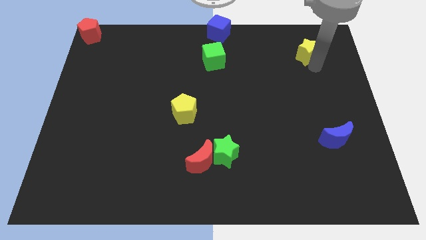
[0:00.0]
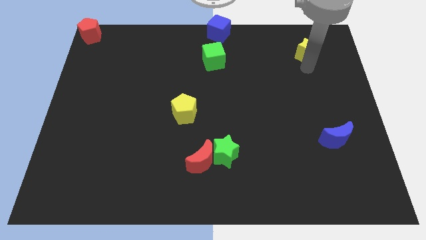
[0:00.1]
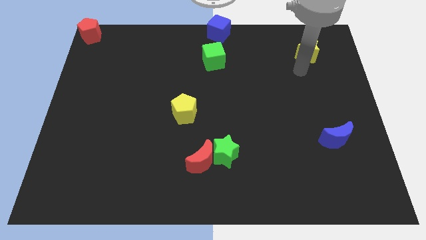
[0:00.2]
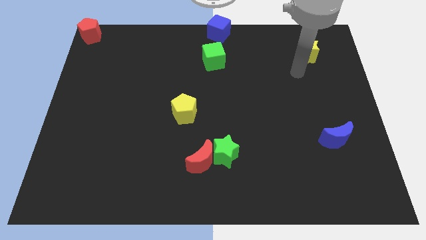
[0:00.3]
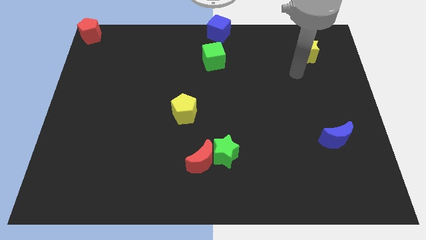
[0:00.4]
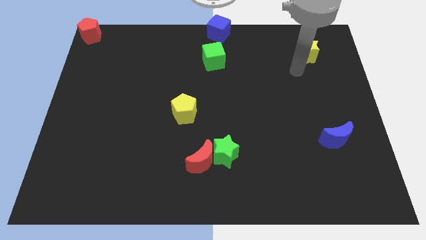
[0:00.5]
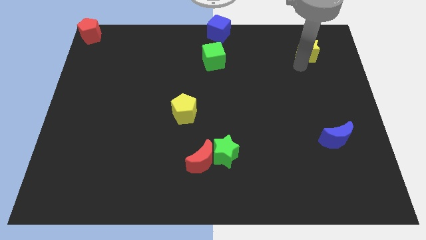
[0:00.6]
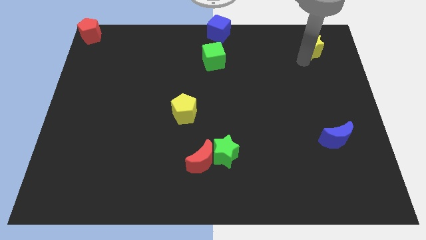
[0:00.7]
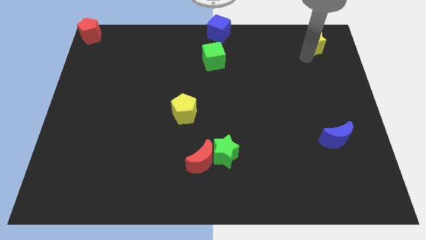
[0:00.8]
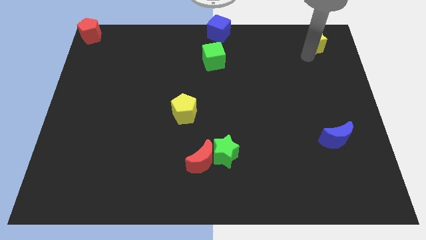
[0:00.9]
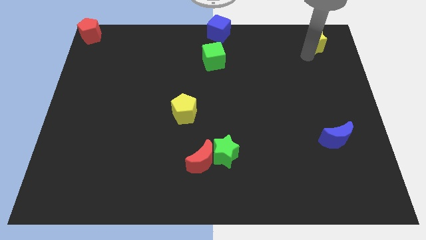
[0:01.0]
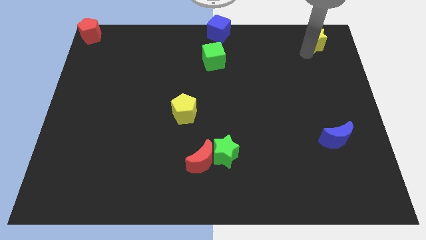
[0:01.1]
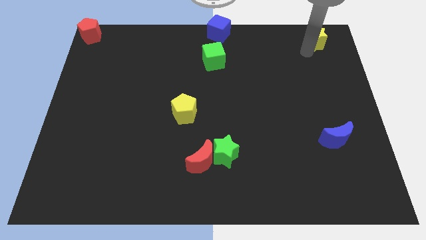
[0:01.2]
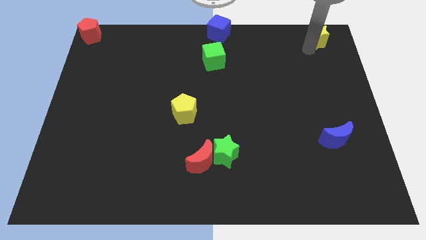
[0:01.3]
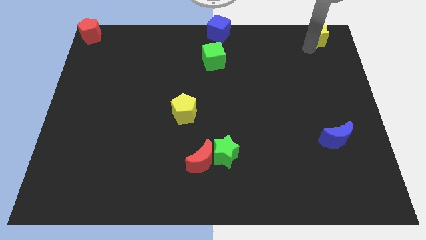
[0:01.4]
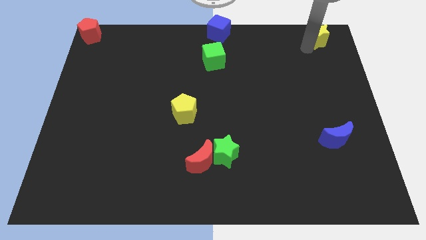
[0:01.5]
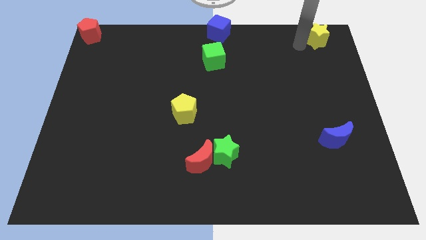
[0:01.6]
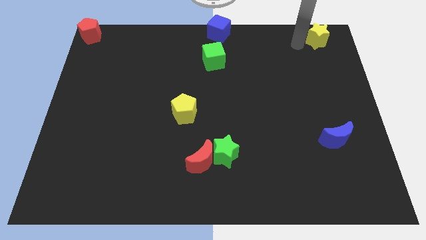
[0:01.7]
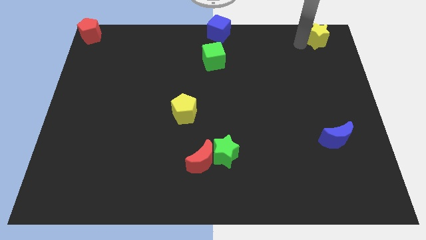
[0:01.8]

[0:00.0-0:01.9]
move the yellow star to the top right corner

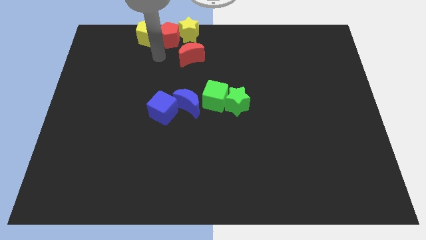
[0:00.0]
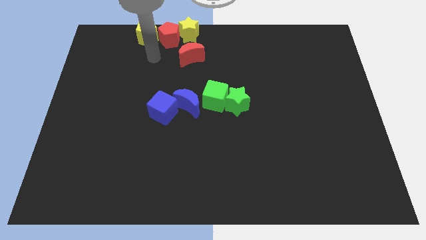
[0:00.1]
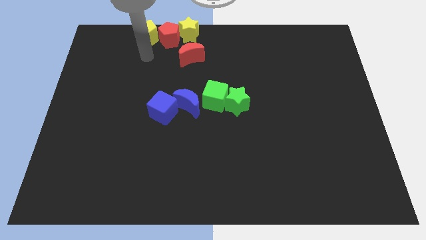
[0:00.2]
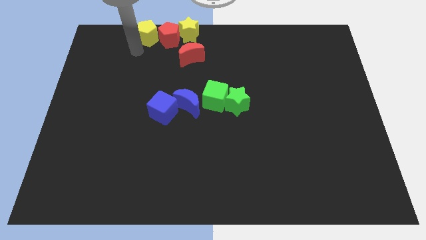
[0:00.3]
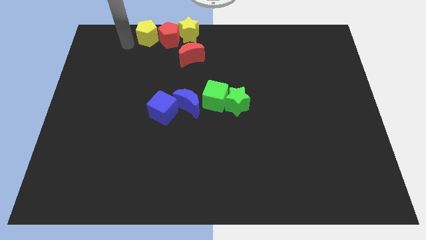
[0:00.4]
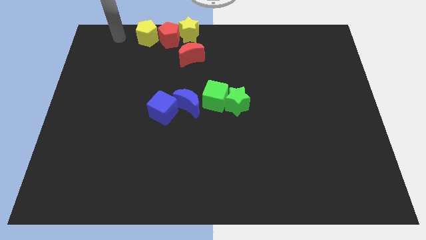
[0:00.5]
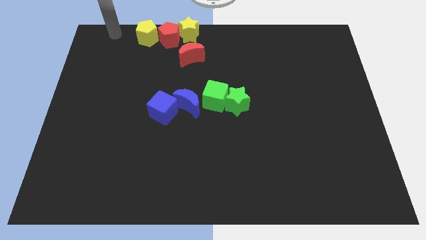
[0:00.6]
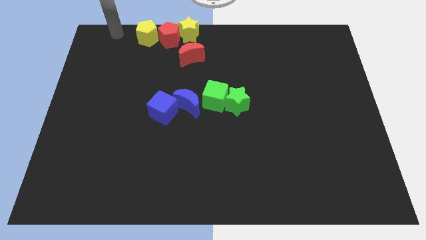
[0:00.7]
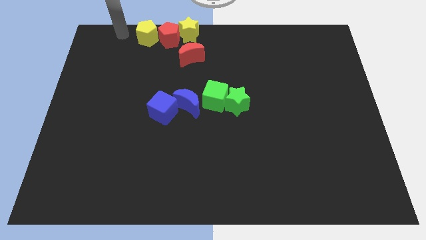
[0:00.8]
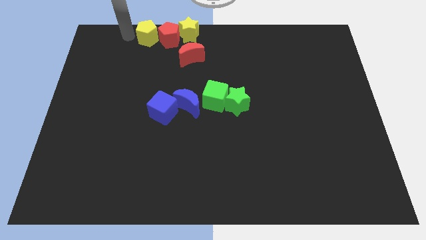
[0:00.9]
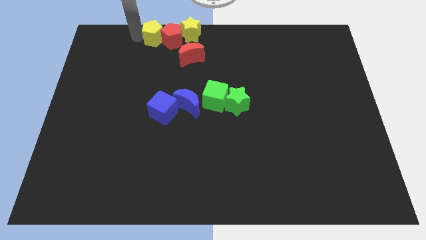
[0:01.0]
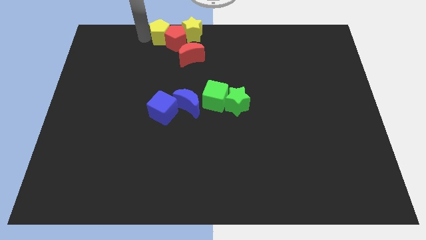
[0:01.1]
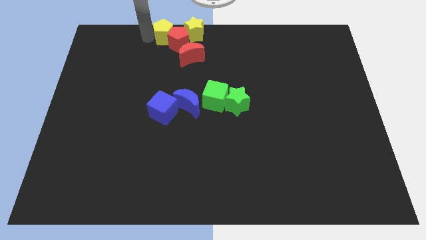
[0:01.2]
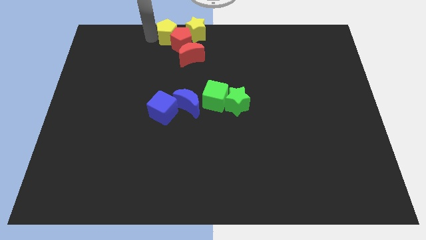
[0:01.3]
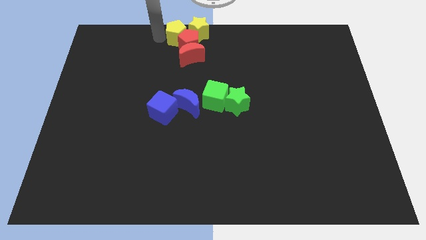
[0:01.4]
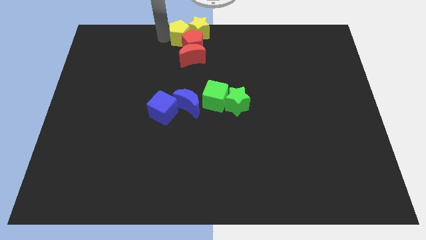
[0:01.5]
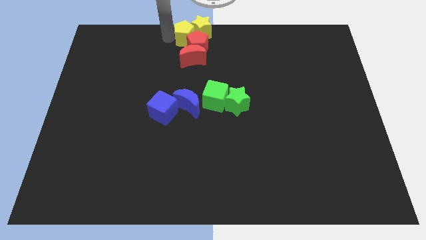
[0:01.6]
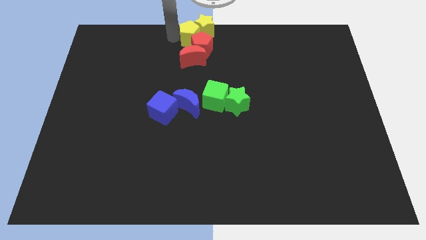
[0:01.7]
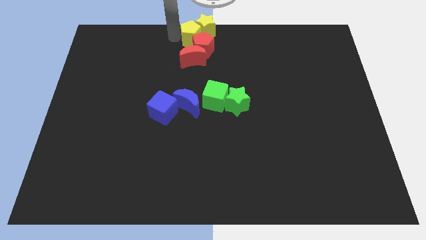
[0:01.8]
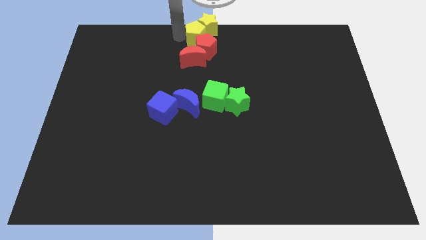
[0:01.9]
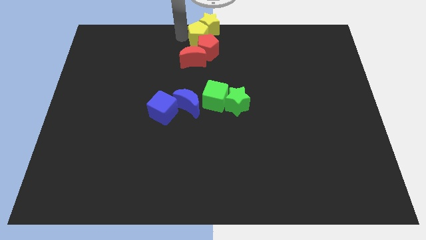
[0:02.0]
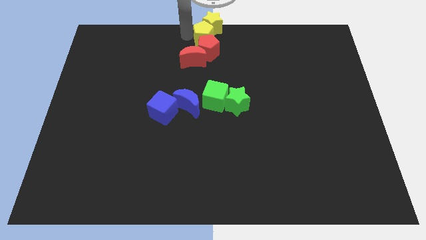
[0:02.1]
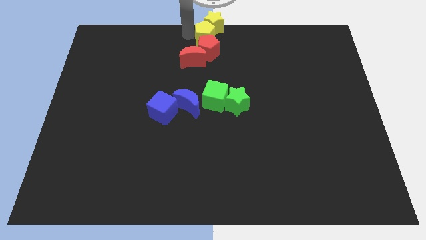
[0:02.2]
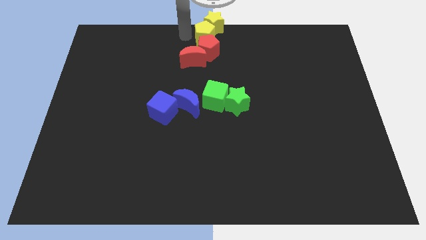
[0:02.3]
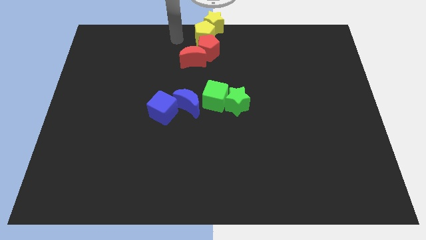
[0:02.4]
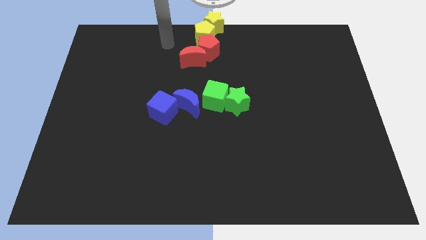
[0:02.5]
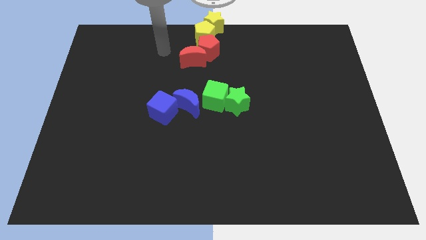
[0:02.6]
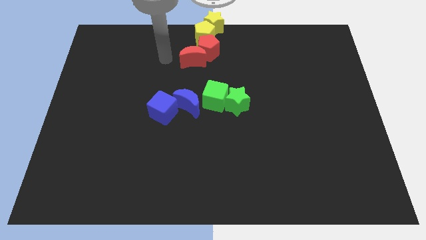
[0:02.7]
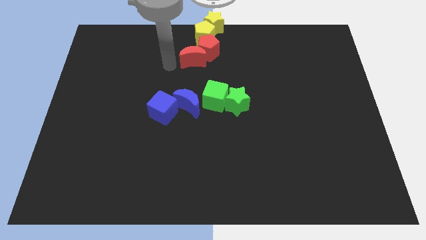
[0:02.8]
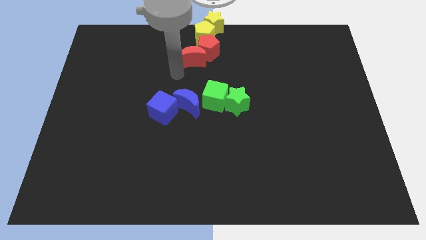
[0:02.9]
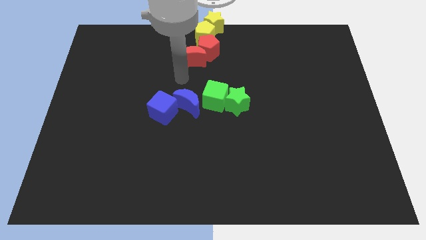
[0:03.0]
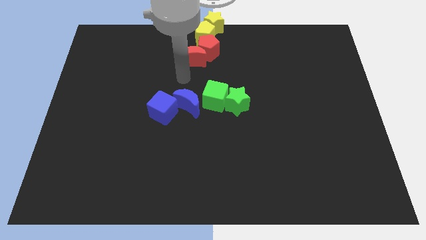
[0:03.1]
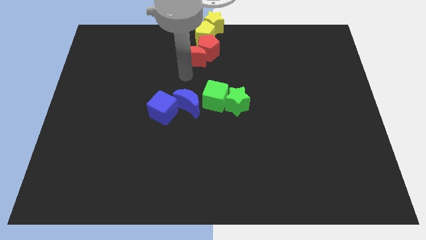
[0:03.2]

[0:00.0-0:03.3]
push the yellow pentagon along with the yellow star to the top center of the board

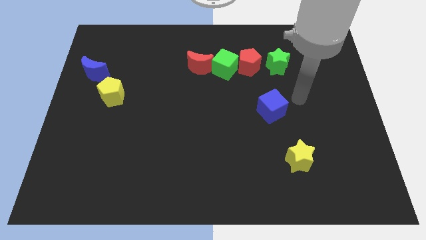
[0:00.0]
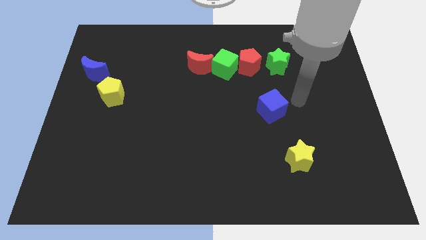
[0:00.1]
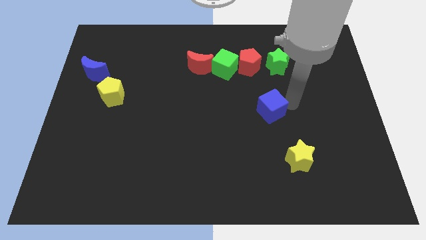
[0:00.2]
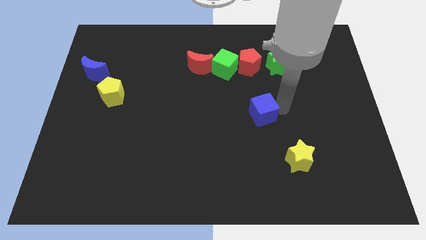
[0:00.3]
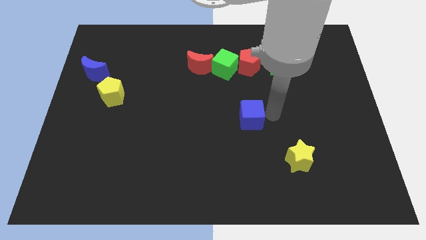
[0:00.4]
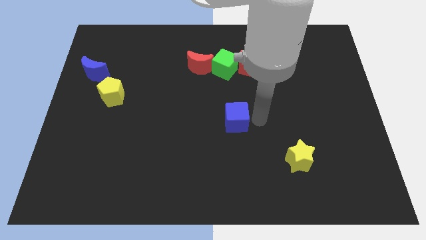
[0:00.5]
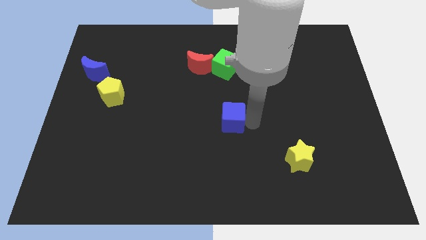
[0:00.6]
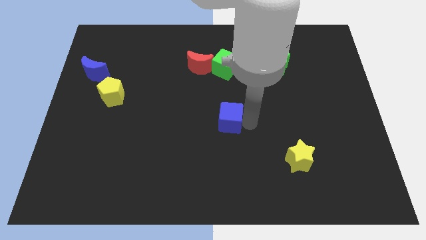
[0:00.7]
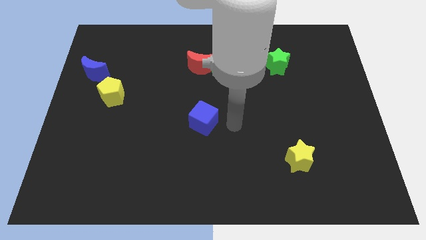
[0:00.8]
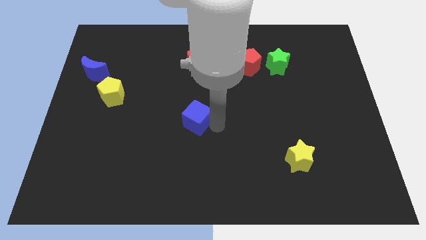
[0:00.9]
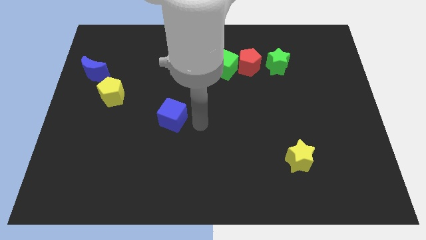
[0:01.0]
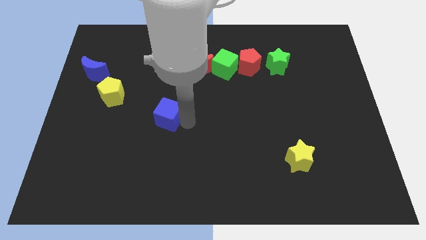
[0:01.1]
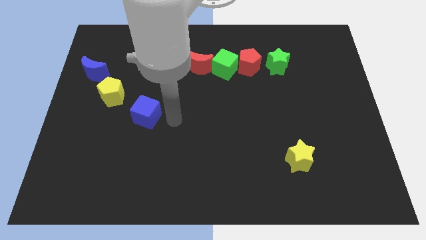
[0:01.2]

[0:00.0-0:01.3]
push the blue cube towards the yellow pentagon

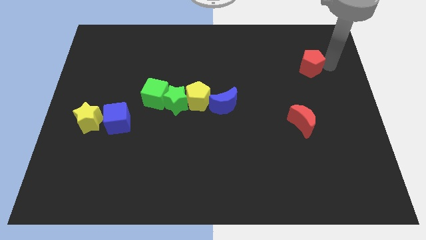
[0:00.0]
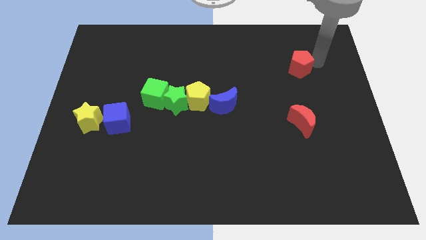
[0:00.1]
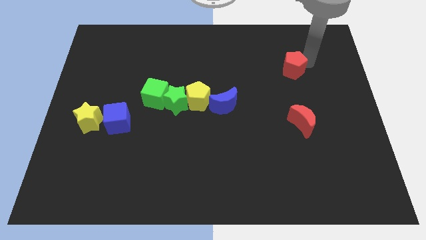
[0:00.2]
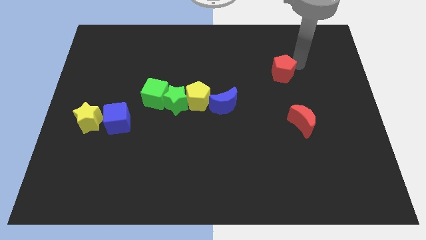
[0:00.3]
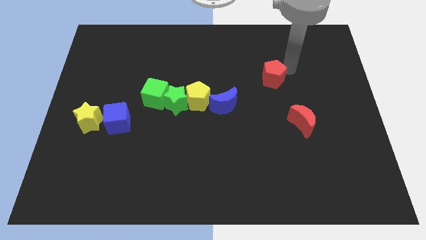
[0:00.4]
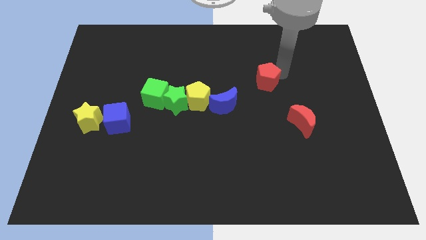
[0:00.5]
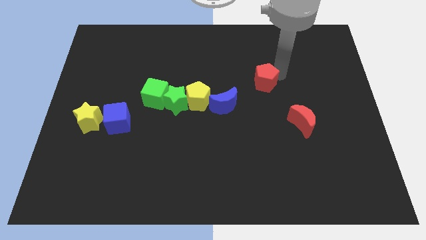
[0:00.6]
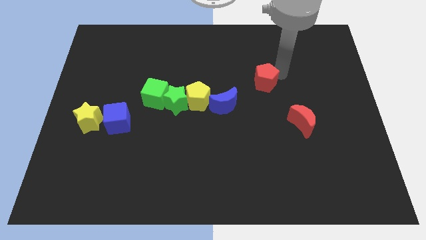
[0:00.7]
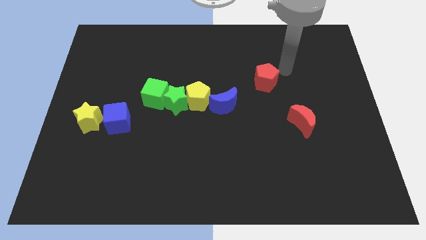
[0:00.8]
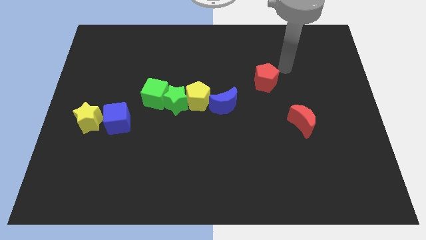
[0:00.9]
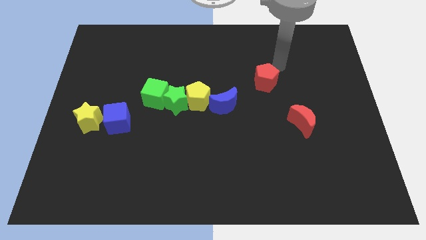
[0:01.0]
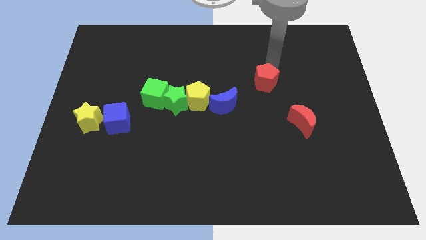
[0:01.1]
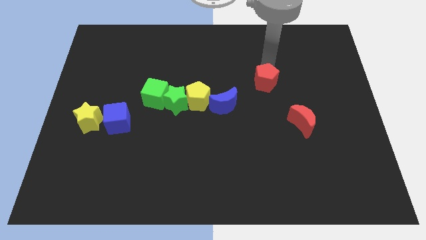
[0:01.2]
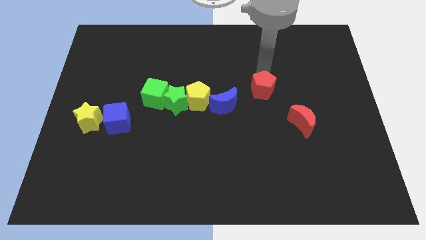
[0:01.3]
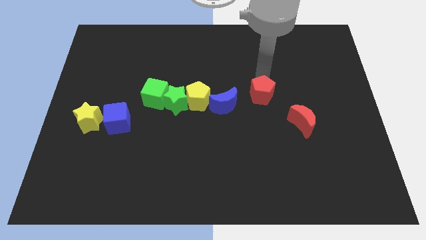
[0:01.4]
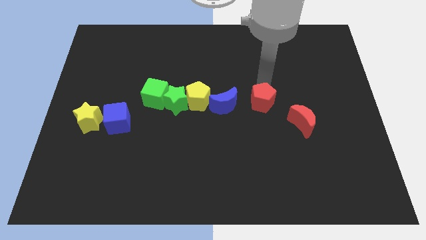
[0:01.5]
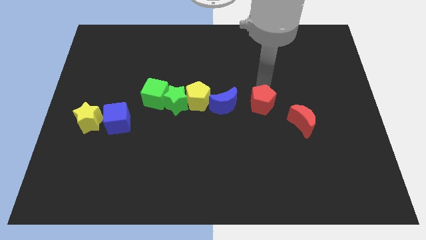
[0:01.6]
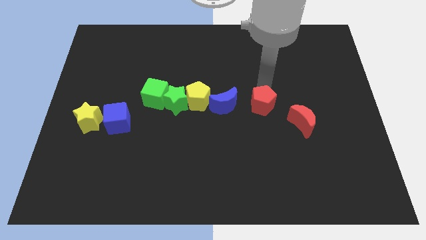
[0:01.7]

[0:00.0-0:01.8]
move the red pentagon towards blue crescent

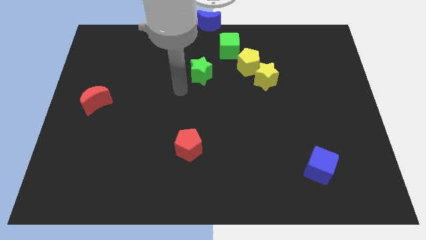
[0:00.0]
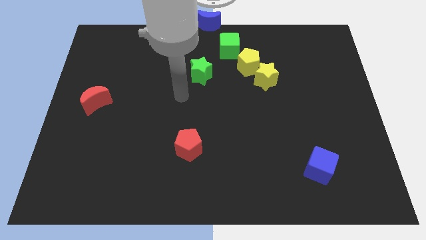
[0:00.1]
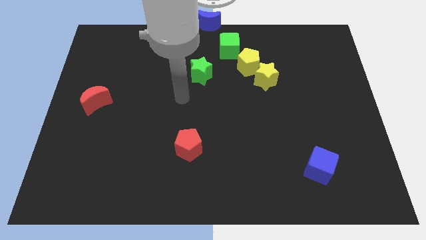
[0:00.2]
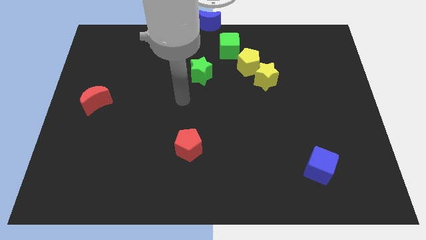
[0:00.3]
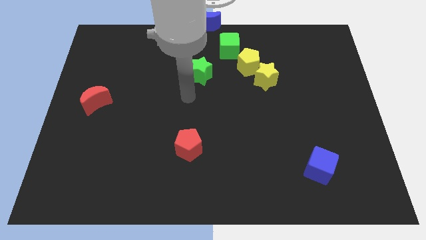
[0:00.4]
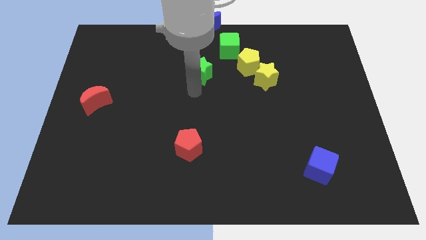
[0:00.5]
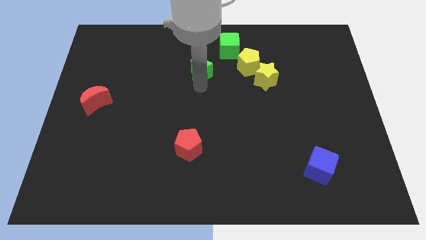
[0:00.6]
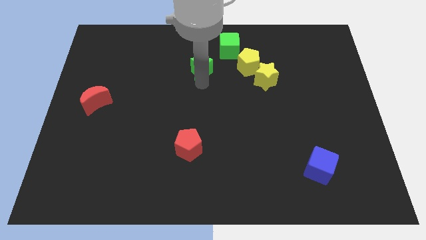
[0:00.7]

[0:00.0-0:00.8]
touch the bottom of green star
